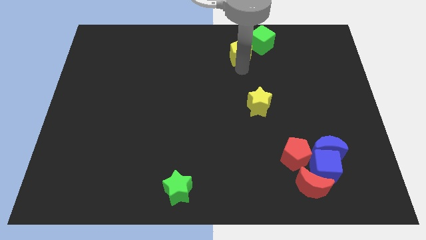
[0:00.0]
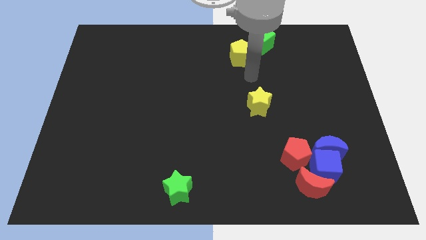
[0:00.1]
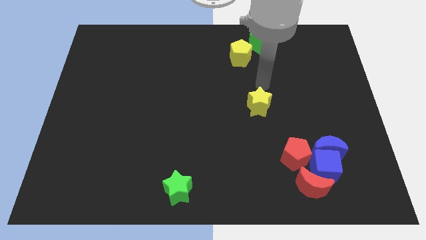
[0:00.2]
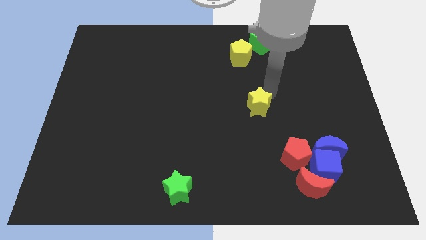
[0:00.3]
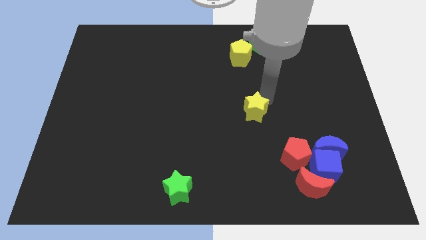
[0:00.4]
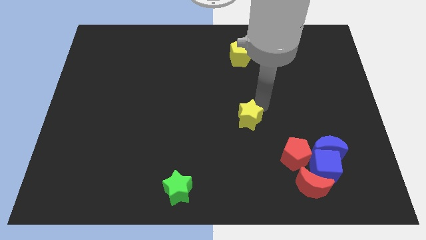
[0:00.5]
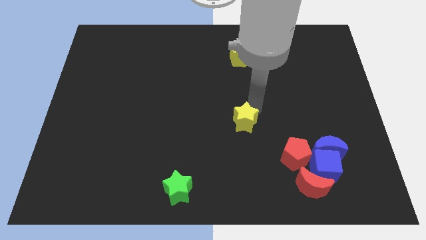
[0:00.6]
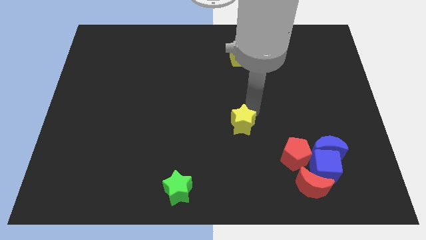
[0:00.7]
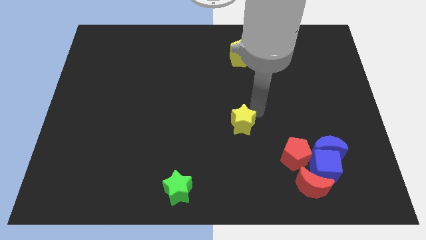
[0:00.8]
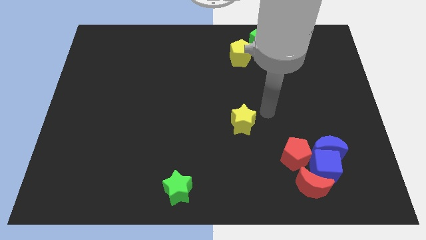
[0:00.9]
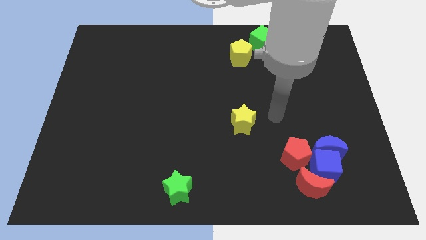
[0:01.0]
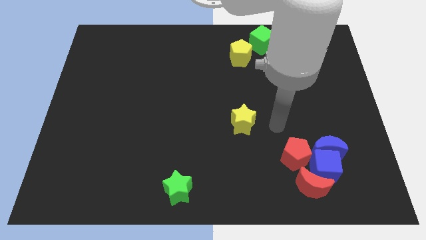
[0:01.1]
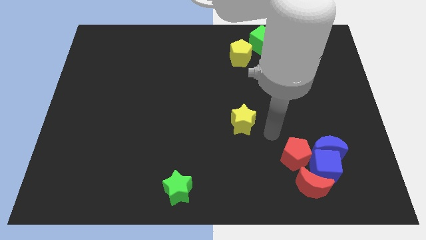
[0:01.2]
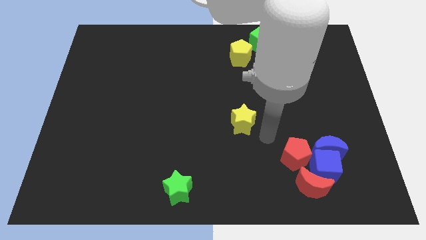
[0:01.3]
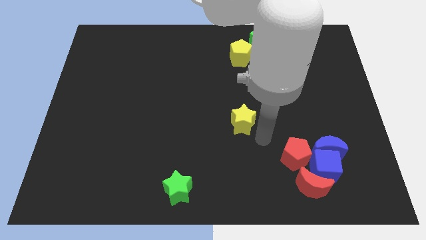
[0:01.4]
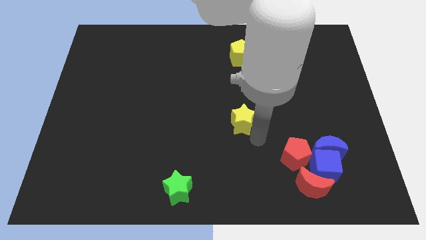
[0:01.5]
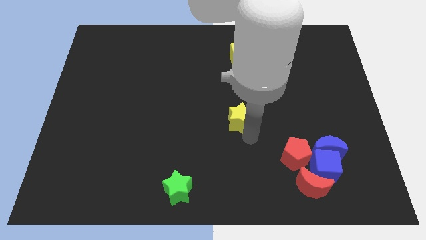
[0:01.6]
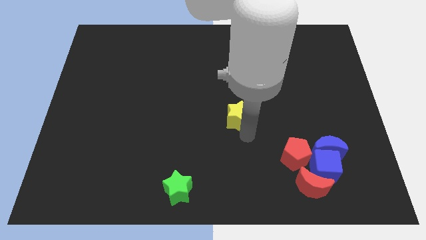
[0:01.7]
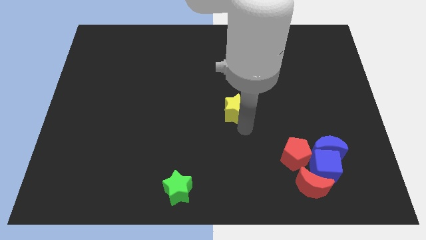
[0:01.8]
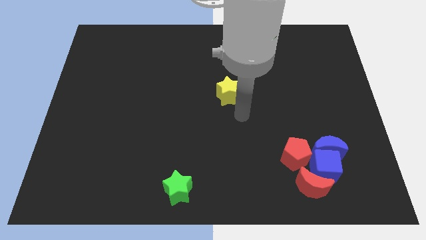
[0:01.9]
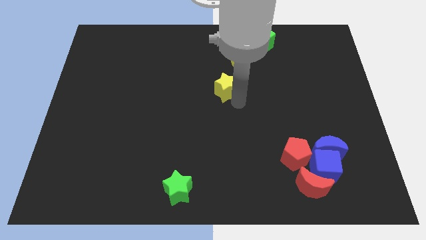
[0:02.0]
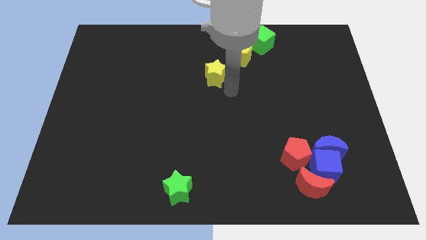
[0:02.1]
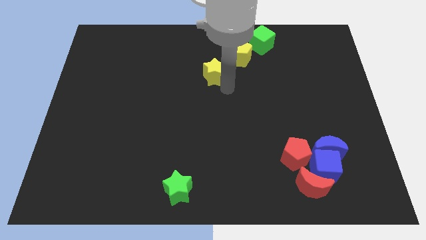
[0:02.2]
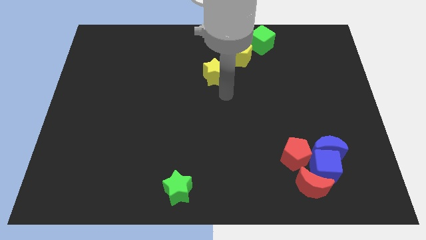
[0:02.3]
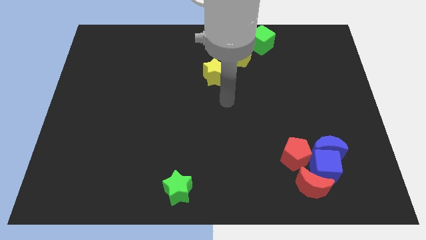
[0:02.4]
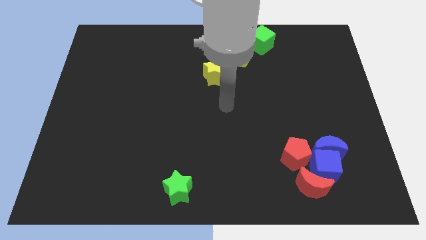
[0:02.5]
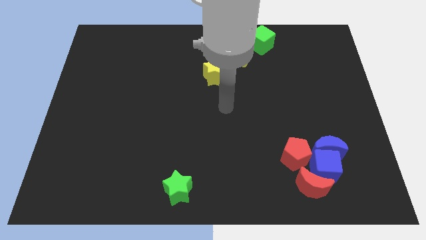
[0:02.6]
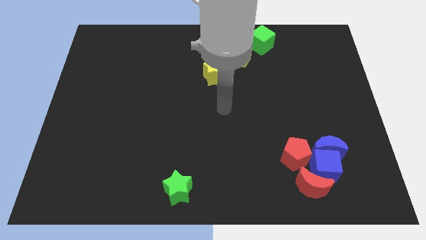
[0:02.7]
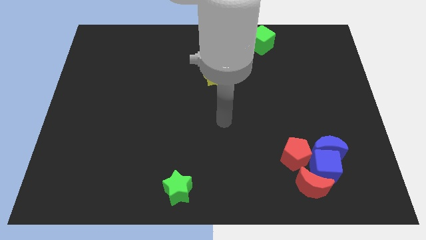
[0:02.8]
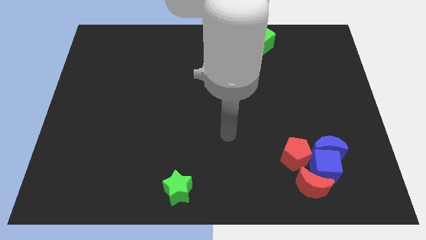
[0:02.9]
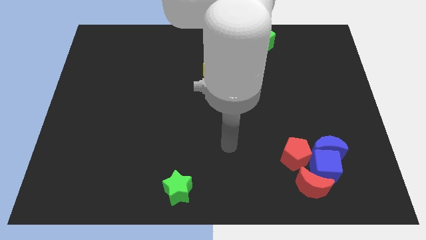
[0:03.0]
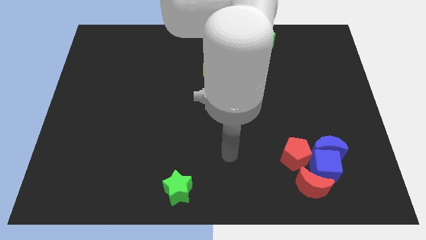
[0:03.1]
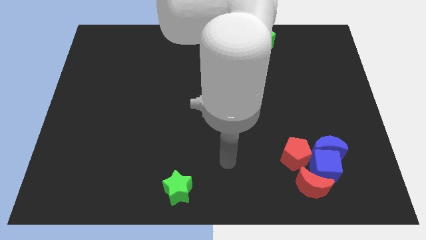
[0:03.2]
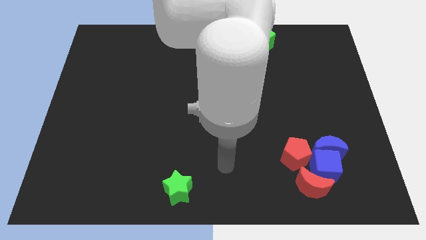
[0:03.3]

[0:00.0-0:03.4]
slide the yellow star towards the bottom left side of the yellow pentagon

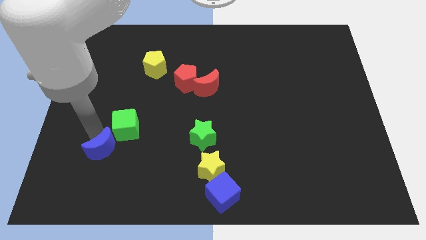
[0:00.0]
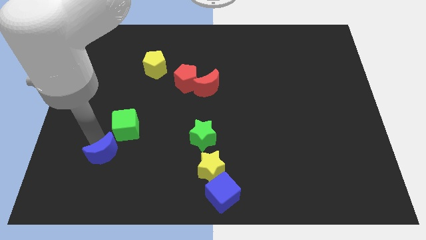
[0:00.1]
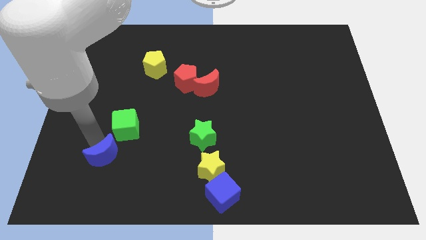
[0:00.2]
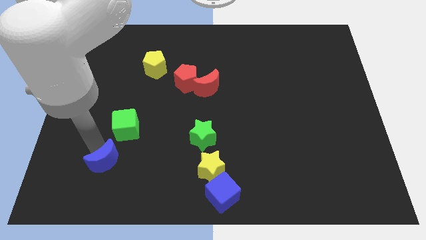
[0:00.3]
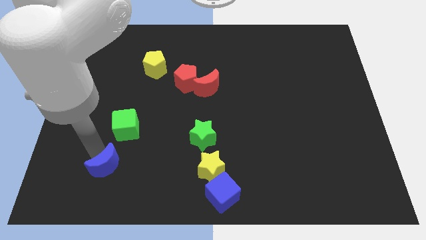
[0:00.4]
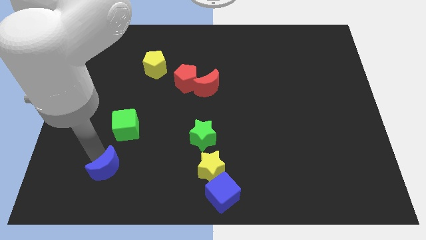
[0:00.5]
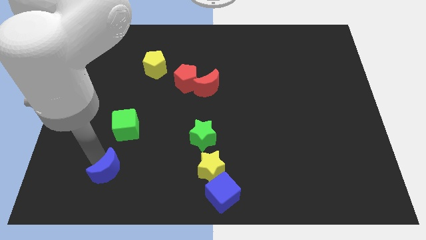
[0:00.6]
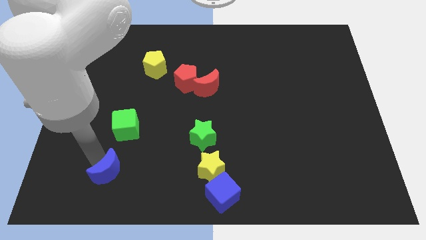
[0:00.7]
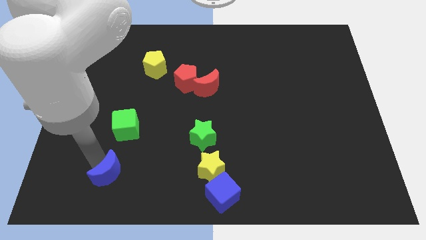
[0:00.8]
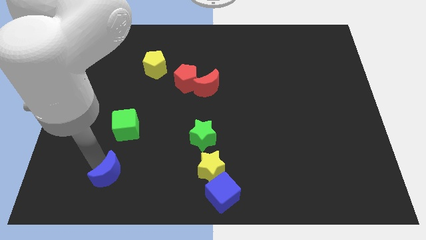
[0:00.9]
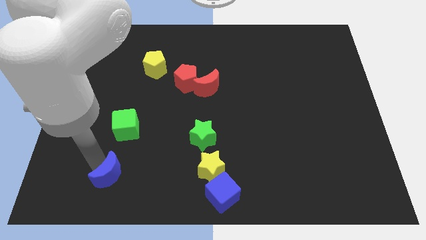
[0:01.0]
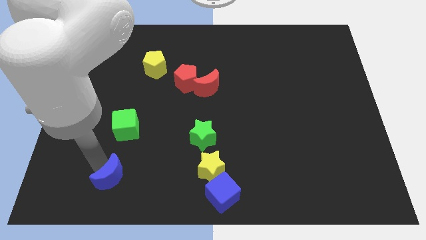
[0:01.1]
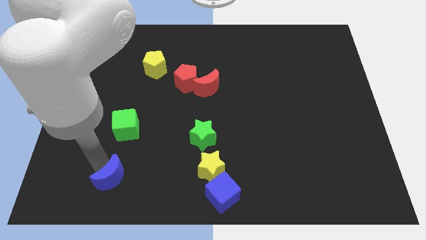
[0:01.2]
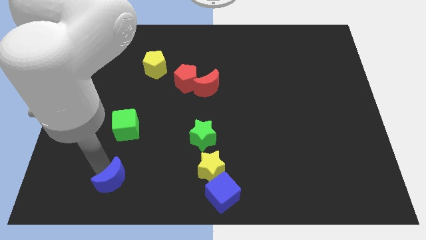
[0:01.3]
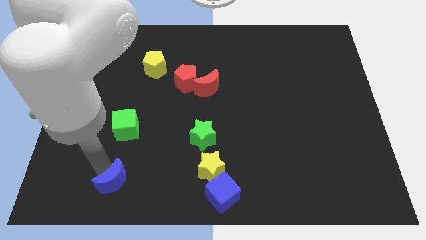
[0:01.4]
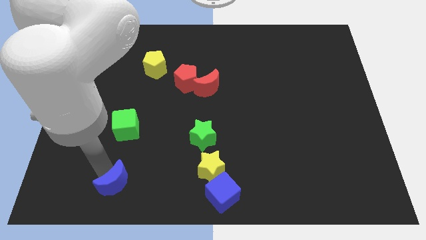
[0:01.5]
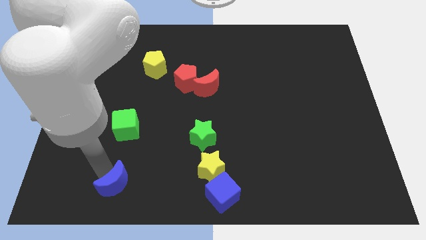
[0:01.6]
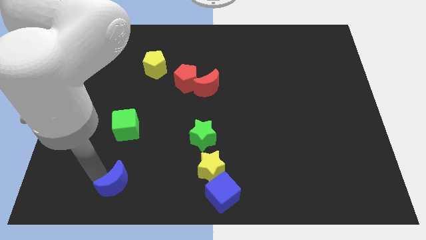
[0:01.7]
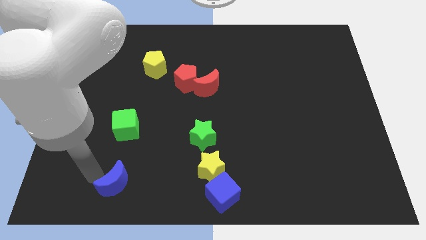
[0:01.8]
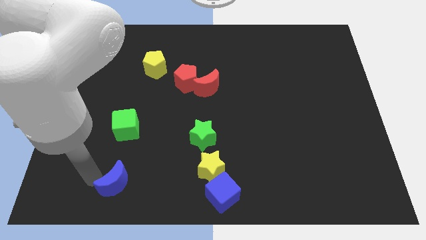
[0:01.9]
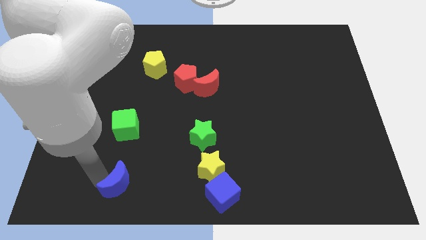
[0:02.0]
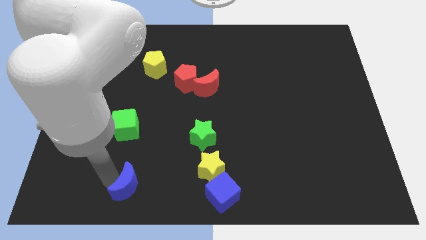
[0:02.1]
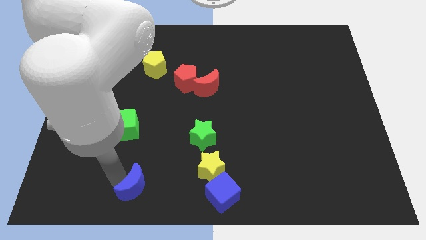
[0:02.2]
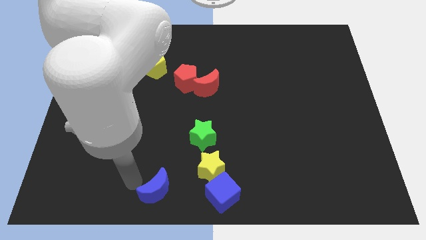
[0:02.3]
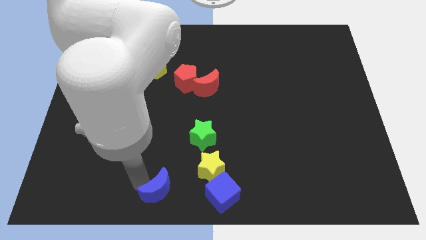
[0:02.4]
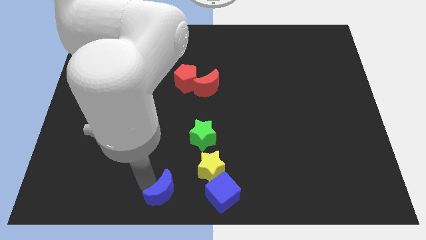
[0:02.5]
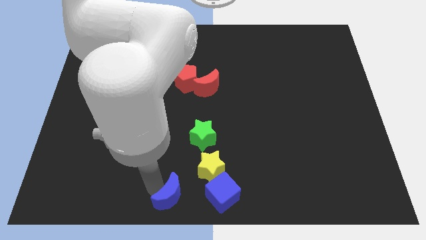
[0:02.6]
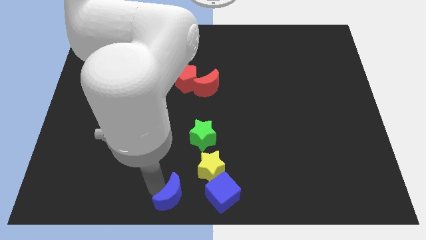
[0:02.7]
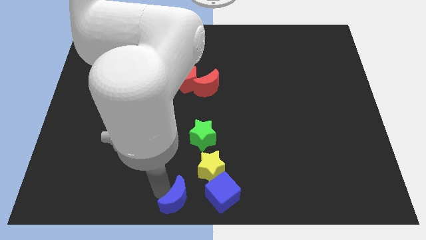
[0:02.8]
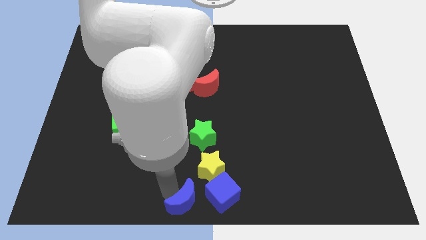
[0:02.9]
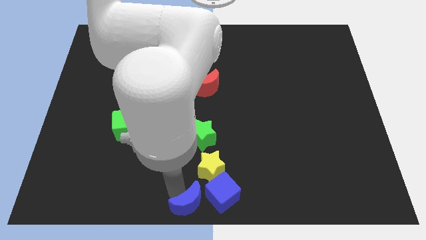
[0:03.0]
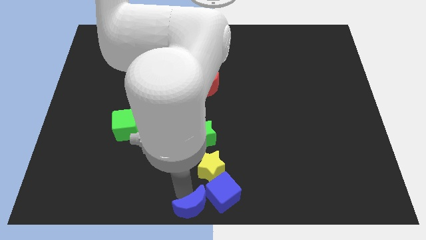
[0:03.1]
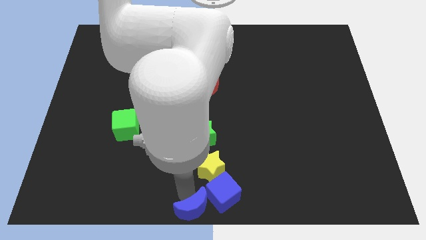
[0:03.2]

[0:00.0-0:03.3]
move blue moon to bottom center

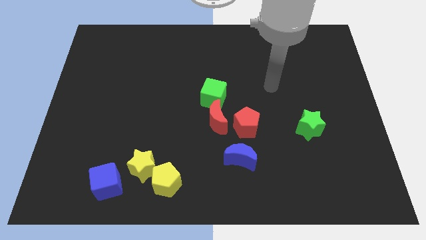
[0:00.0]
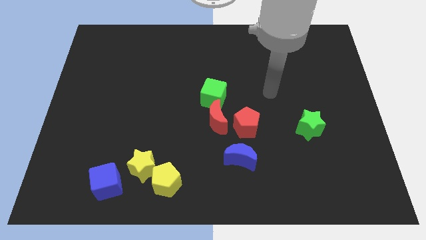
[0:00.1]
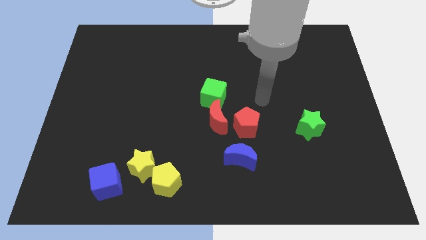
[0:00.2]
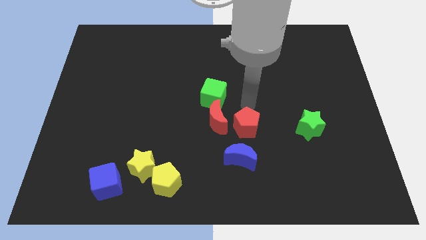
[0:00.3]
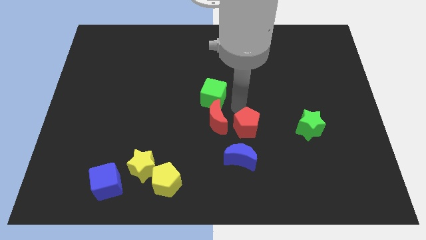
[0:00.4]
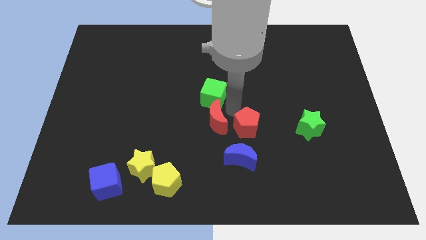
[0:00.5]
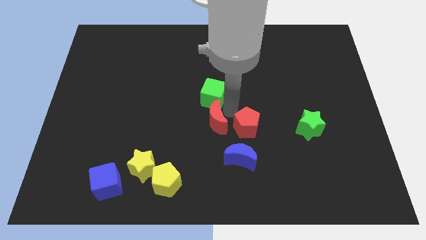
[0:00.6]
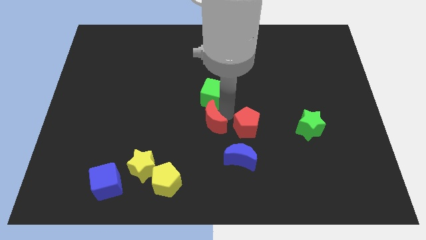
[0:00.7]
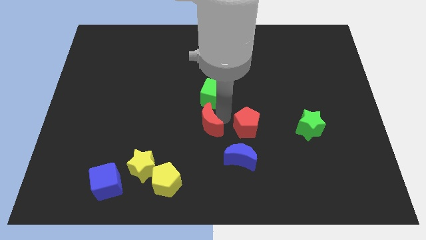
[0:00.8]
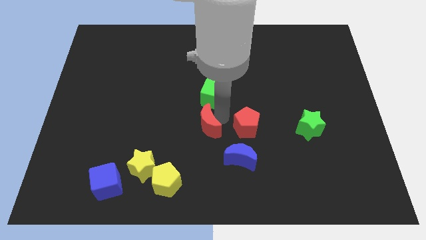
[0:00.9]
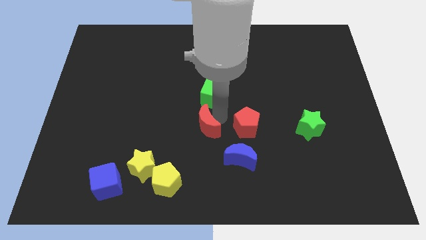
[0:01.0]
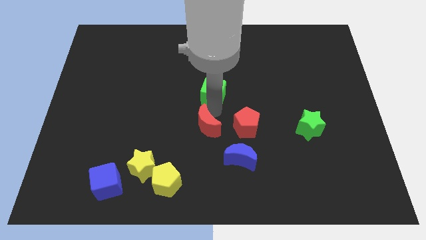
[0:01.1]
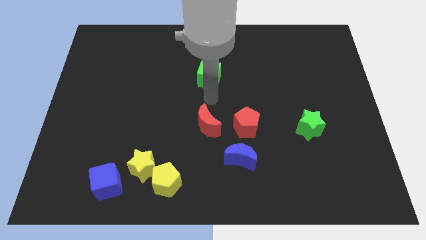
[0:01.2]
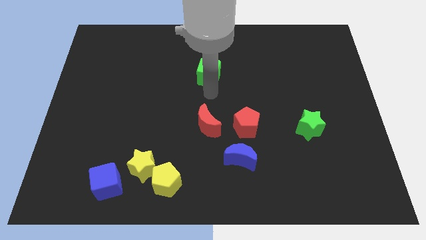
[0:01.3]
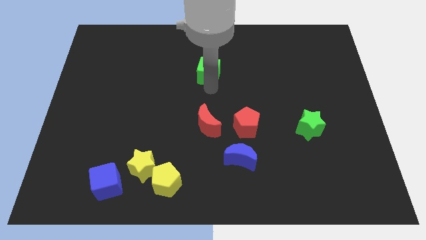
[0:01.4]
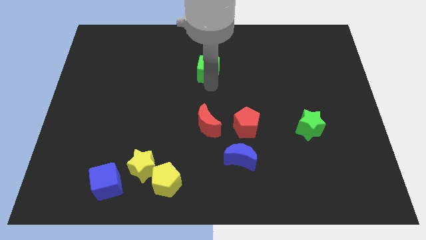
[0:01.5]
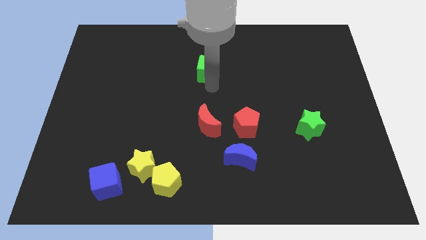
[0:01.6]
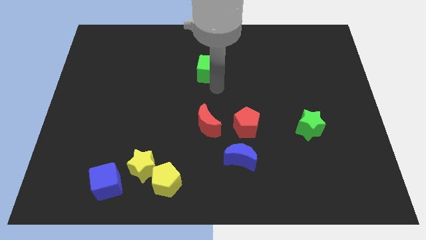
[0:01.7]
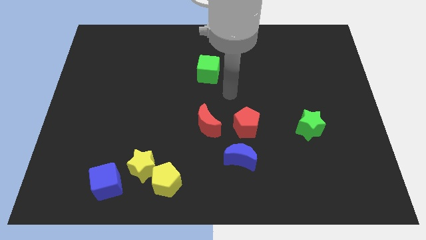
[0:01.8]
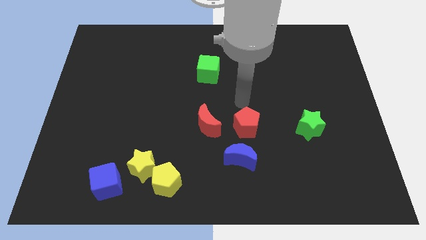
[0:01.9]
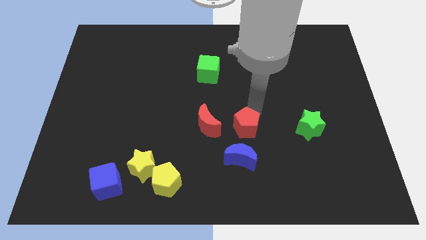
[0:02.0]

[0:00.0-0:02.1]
tap the red moon

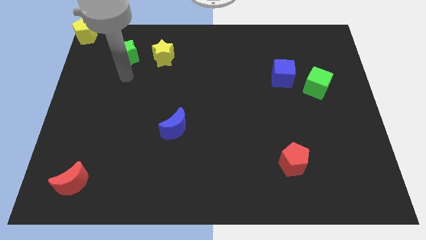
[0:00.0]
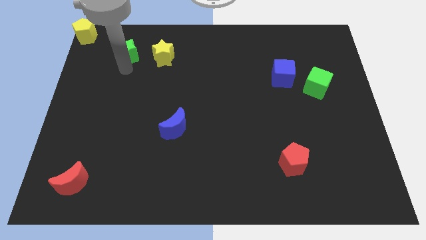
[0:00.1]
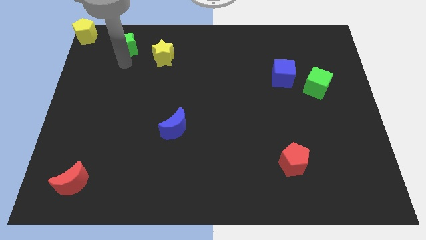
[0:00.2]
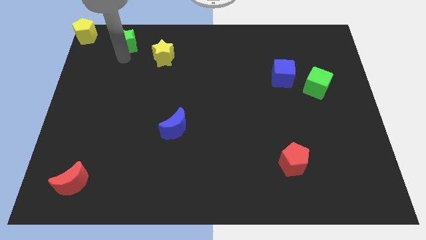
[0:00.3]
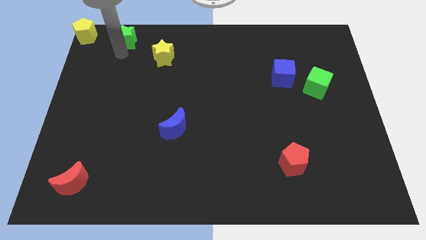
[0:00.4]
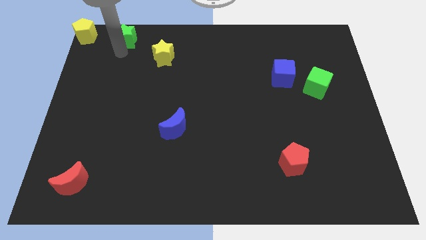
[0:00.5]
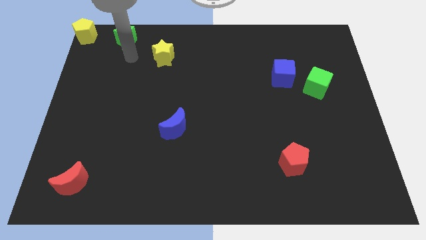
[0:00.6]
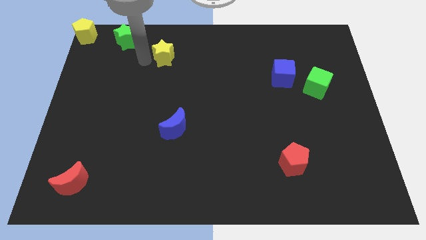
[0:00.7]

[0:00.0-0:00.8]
place the green star to the right of the yellow pentagon
